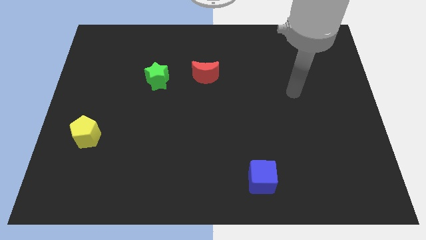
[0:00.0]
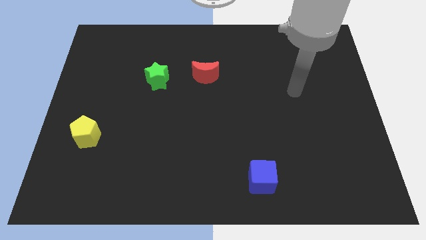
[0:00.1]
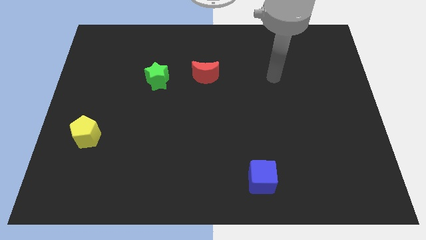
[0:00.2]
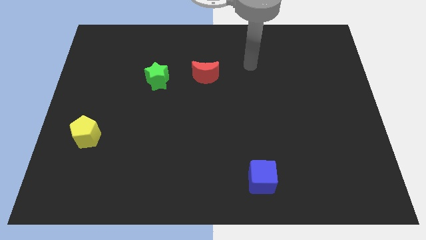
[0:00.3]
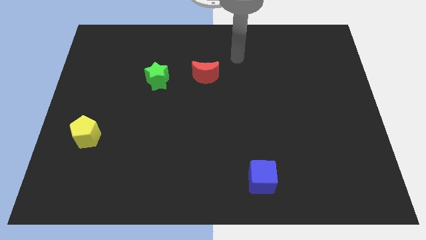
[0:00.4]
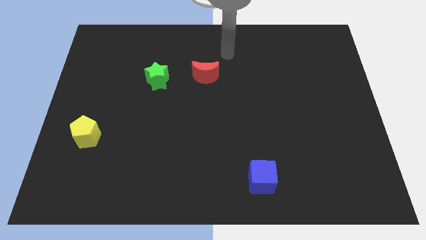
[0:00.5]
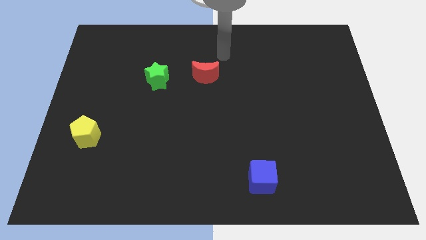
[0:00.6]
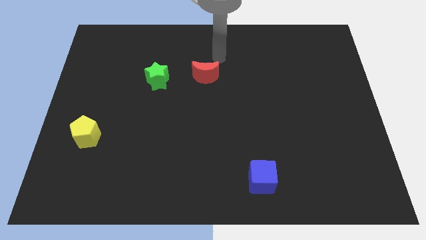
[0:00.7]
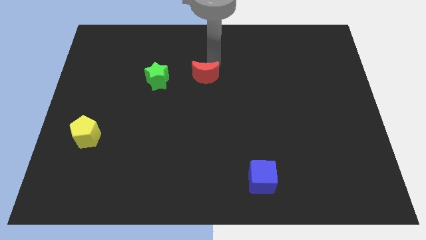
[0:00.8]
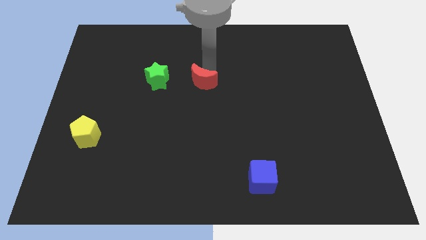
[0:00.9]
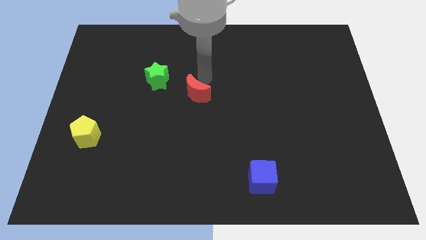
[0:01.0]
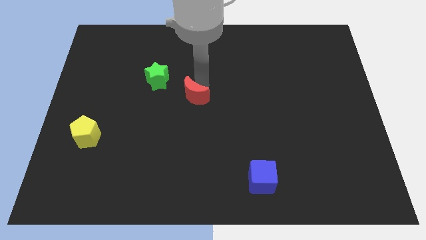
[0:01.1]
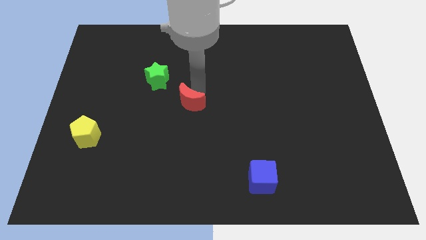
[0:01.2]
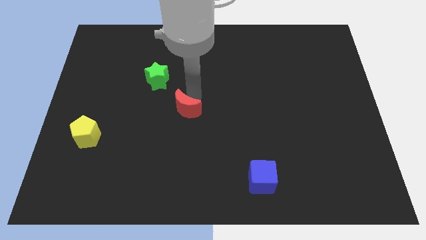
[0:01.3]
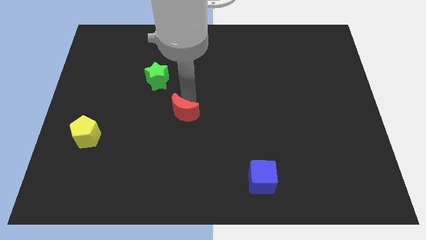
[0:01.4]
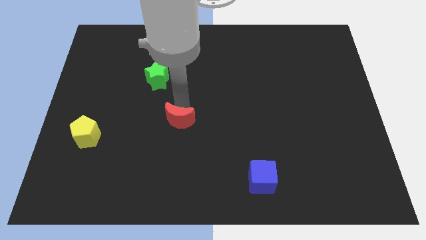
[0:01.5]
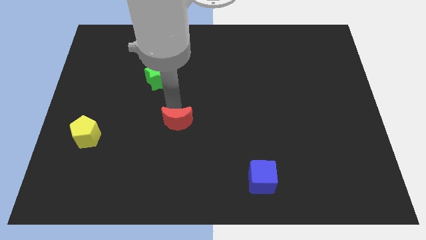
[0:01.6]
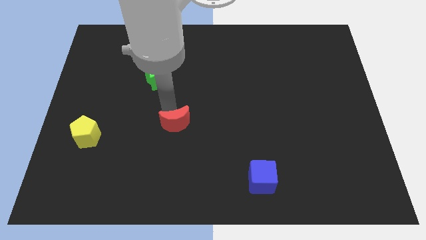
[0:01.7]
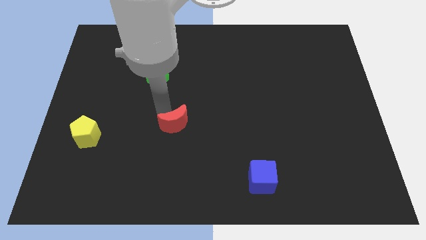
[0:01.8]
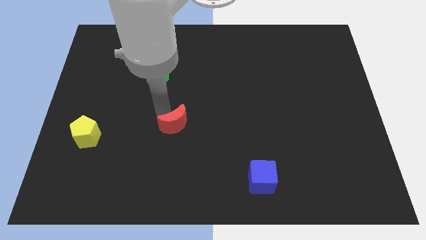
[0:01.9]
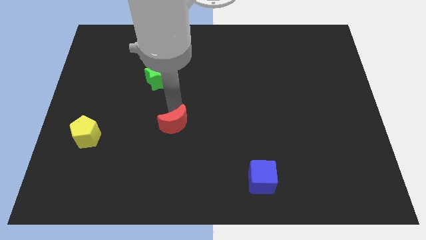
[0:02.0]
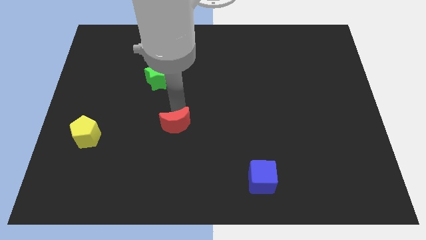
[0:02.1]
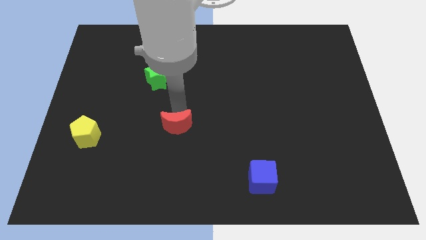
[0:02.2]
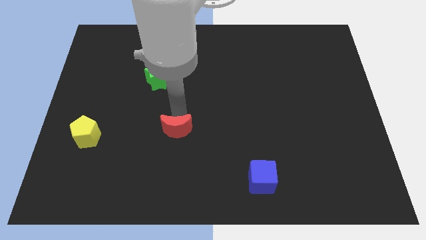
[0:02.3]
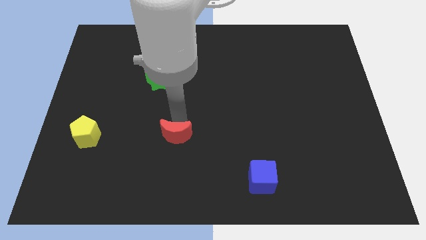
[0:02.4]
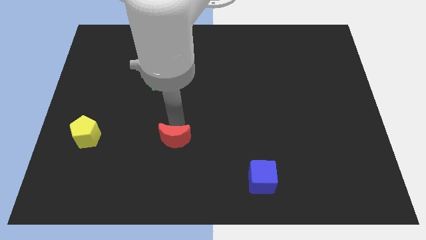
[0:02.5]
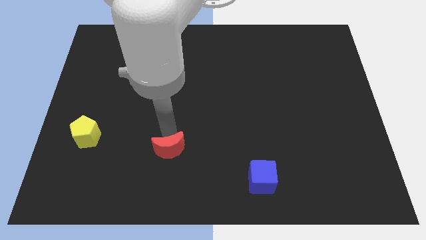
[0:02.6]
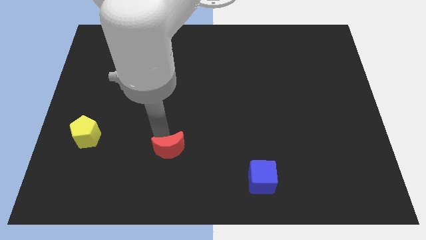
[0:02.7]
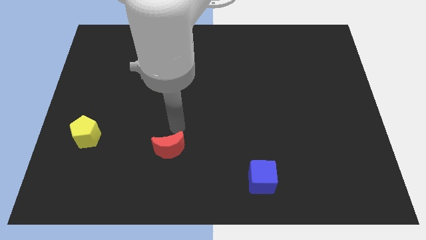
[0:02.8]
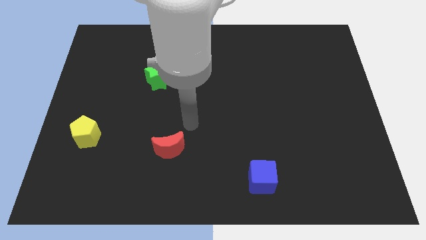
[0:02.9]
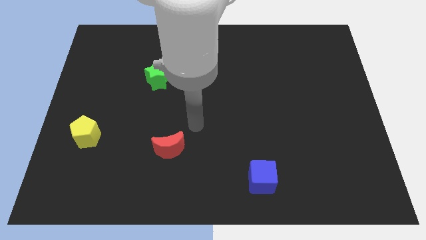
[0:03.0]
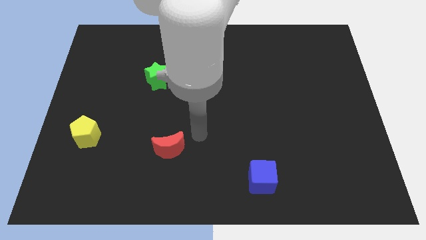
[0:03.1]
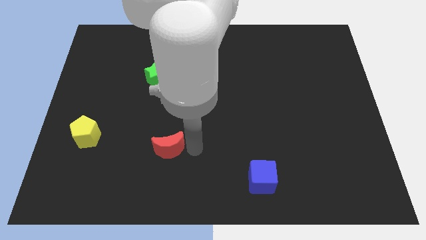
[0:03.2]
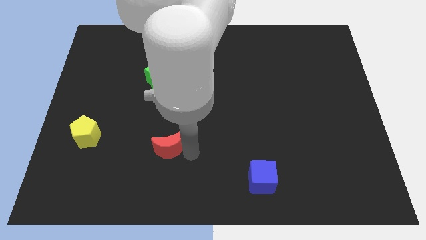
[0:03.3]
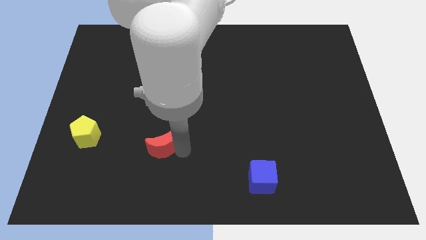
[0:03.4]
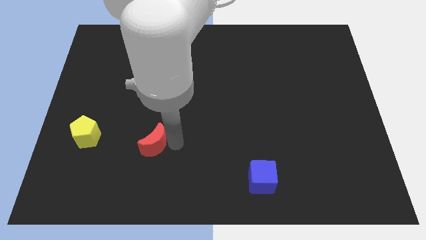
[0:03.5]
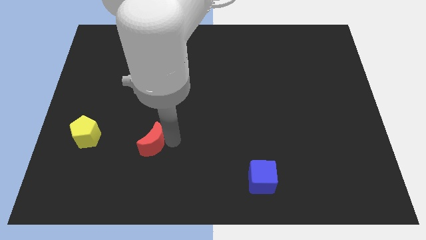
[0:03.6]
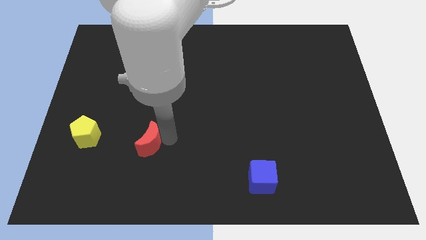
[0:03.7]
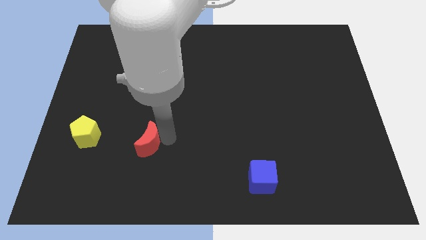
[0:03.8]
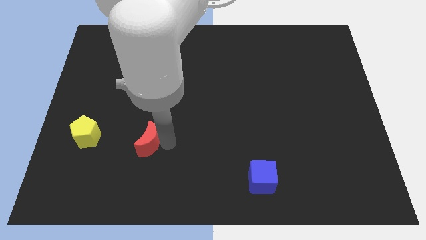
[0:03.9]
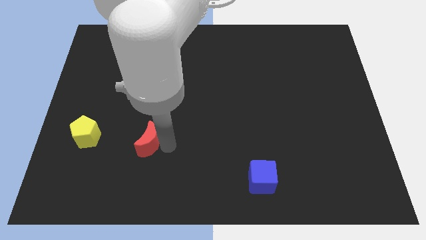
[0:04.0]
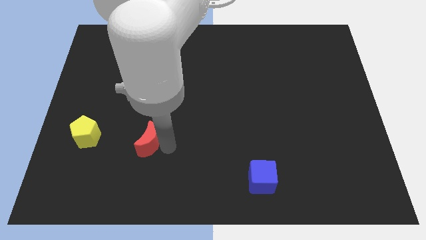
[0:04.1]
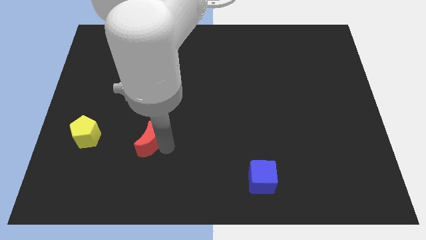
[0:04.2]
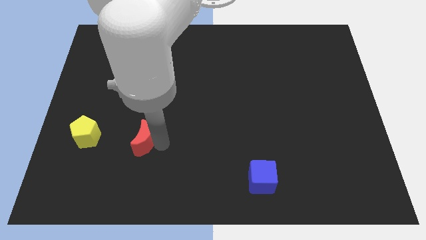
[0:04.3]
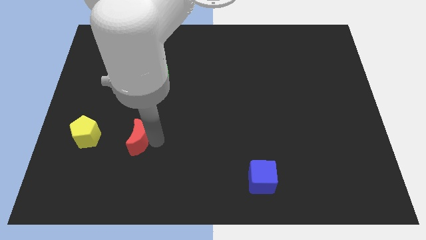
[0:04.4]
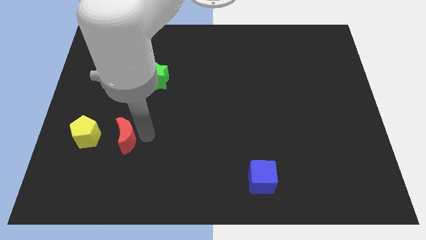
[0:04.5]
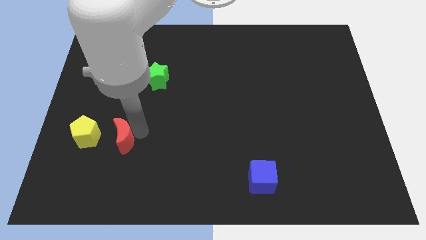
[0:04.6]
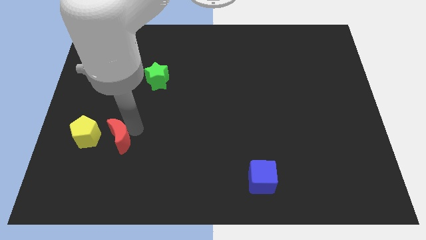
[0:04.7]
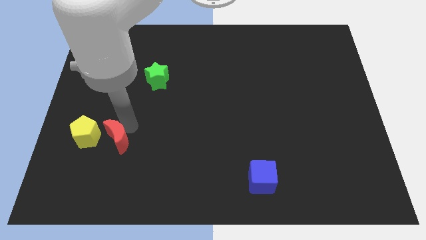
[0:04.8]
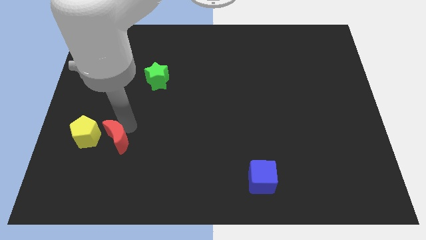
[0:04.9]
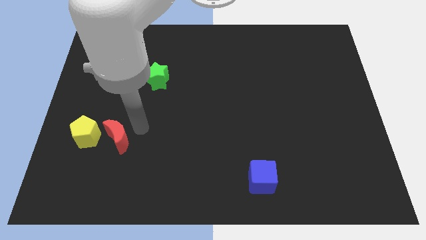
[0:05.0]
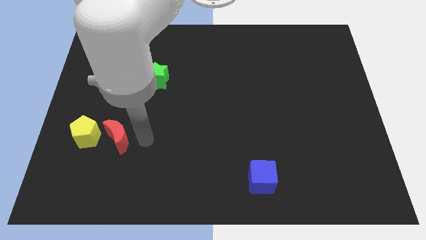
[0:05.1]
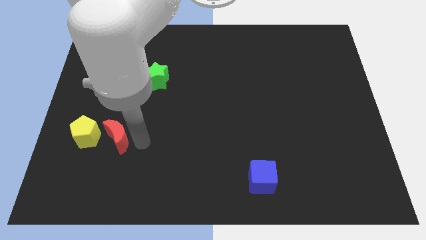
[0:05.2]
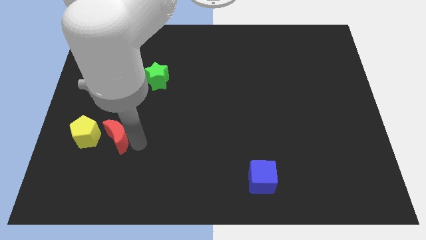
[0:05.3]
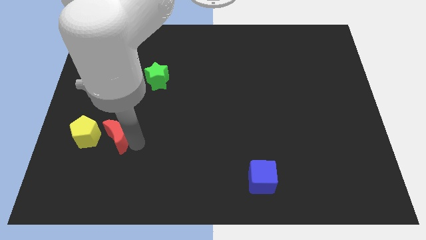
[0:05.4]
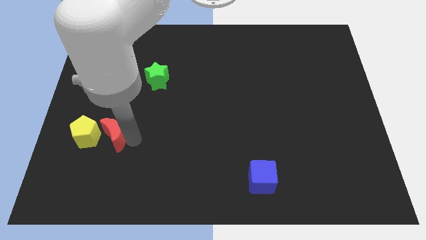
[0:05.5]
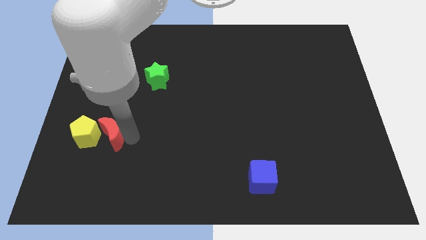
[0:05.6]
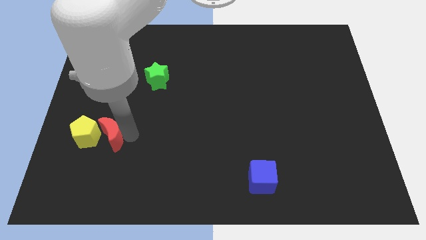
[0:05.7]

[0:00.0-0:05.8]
move the moon close to the pentagon

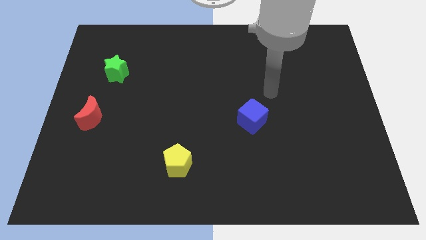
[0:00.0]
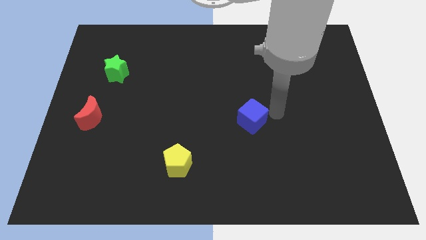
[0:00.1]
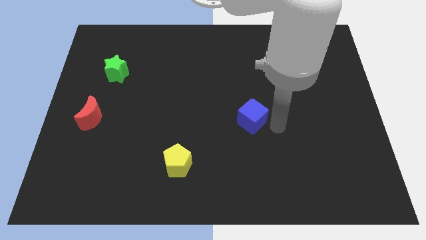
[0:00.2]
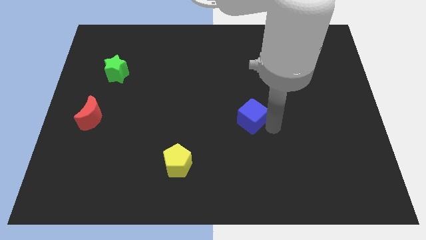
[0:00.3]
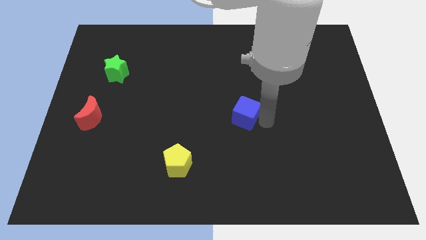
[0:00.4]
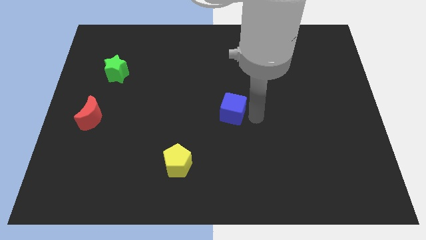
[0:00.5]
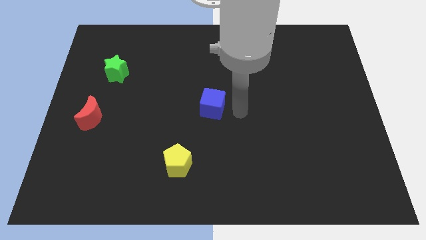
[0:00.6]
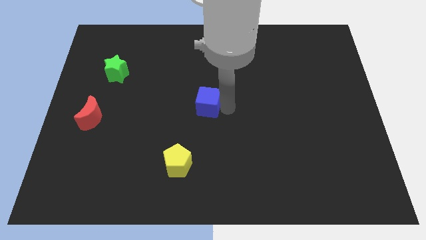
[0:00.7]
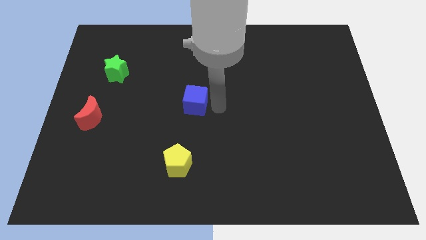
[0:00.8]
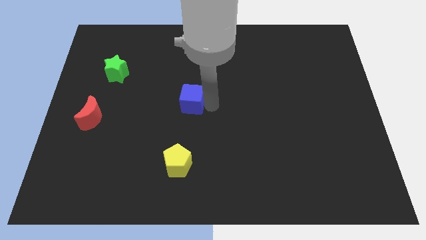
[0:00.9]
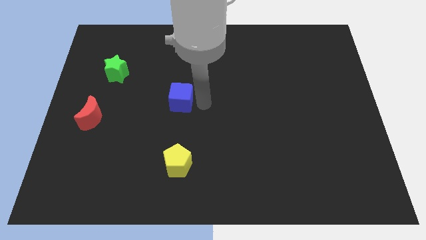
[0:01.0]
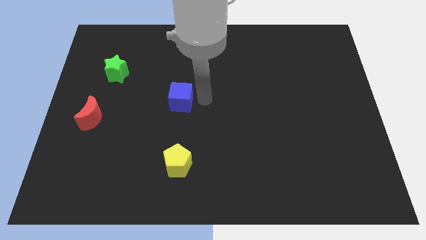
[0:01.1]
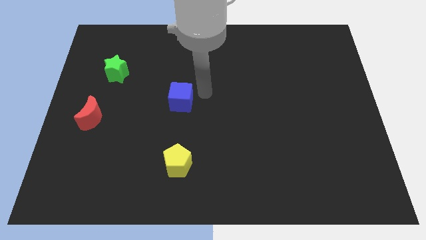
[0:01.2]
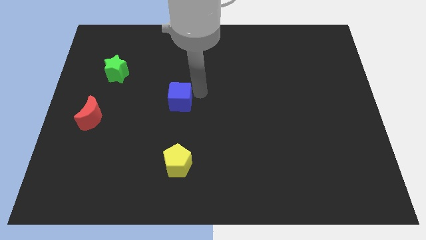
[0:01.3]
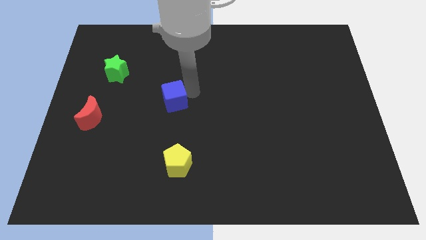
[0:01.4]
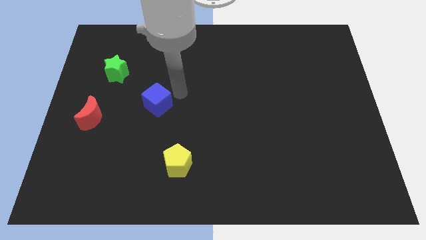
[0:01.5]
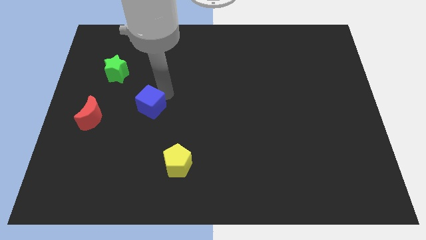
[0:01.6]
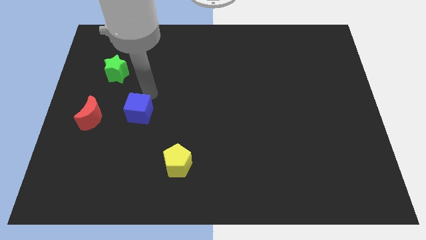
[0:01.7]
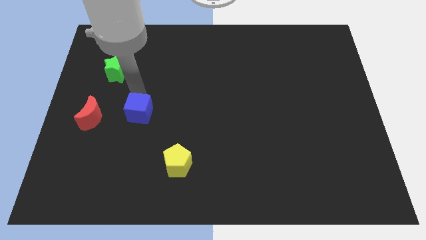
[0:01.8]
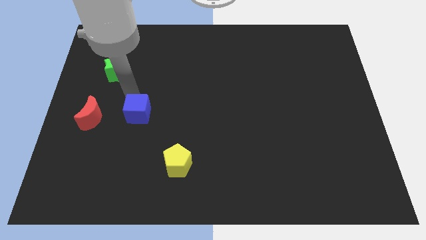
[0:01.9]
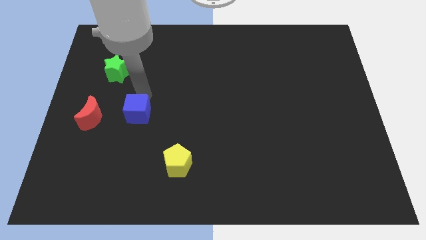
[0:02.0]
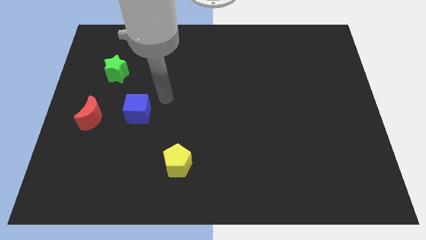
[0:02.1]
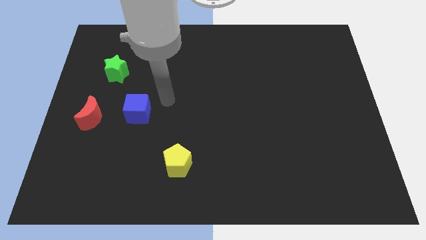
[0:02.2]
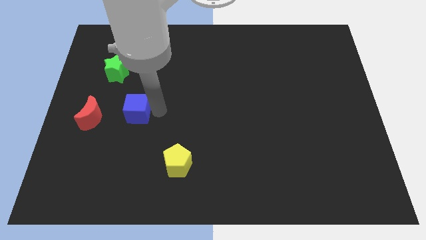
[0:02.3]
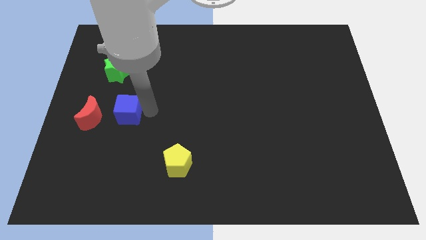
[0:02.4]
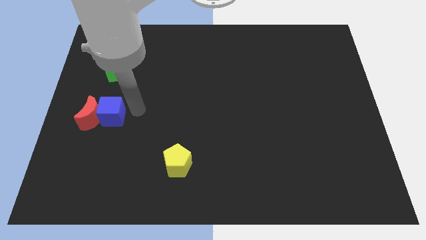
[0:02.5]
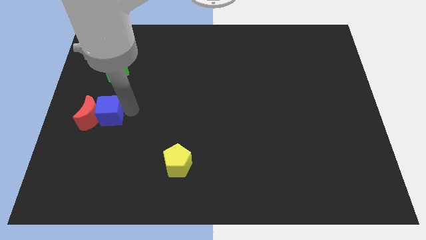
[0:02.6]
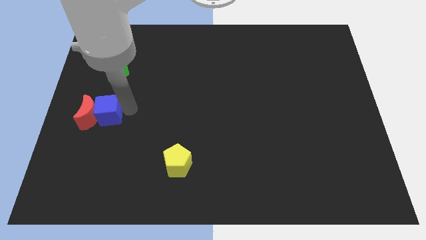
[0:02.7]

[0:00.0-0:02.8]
push the blue cube next to the red block

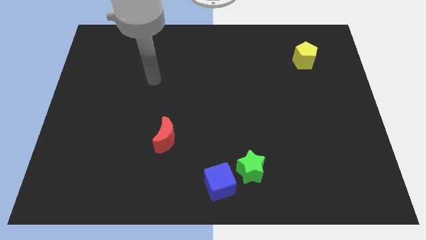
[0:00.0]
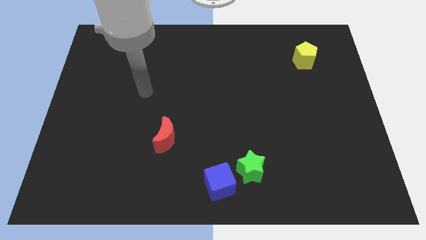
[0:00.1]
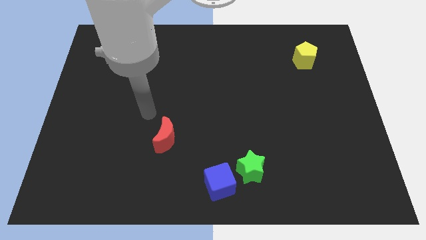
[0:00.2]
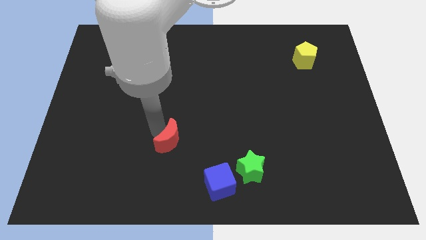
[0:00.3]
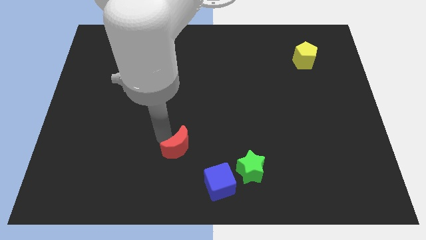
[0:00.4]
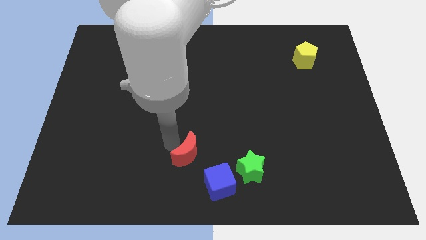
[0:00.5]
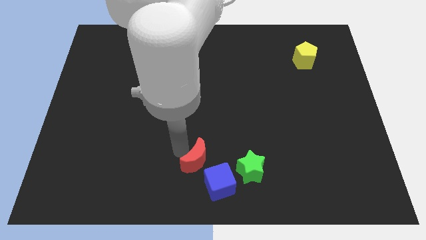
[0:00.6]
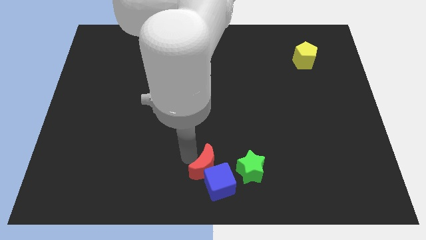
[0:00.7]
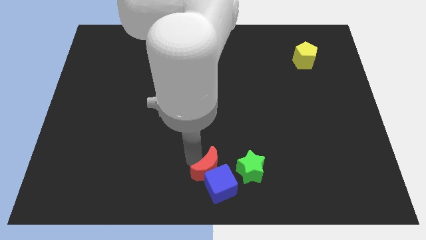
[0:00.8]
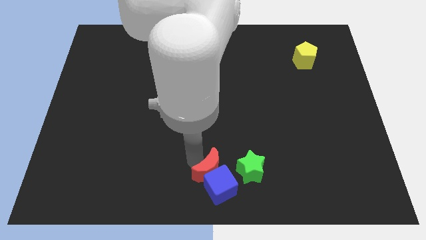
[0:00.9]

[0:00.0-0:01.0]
put the red block close to the blue cube
